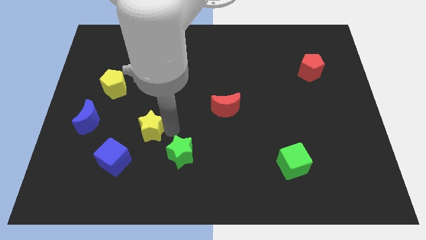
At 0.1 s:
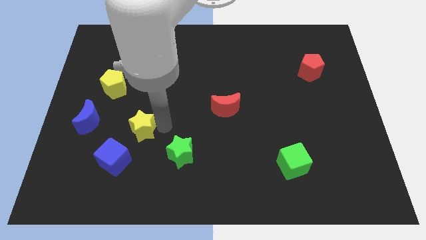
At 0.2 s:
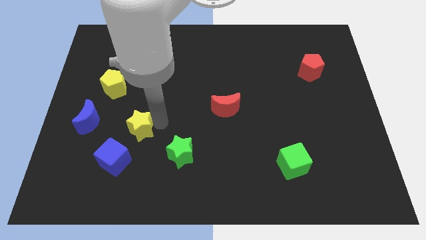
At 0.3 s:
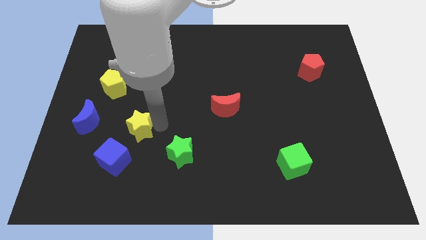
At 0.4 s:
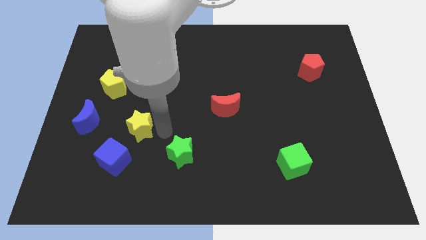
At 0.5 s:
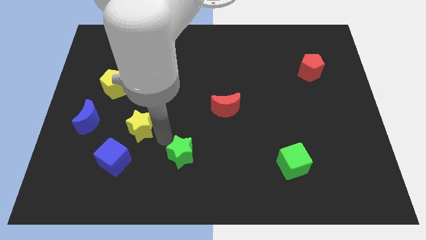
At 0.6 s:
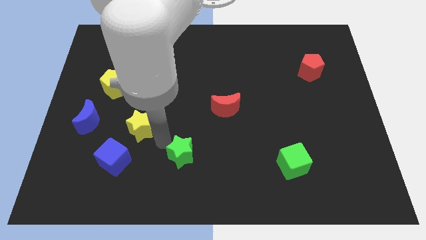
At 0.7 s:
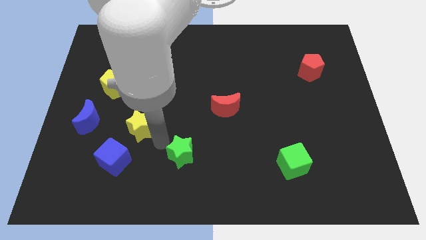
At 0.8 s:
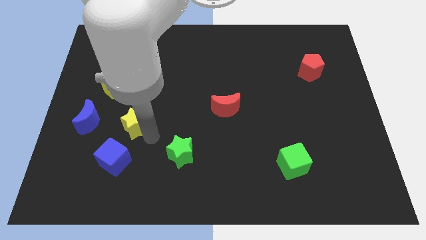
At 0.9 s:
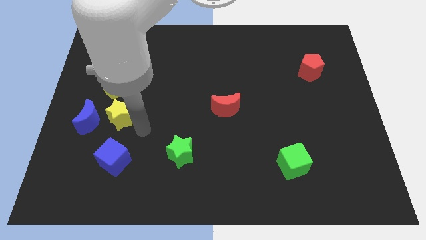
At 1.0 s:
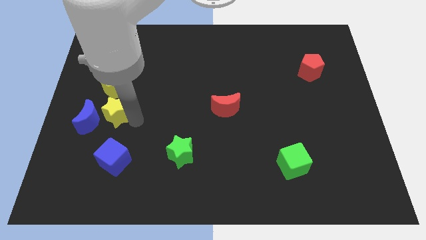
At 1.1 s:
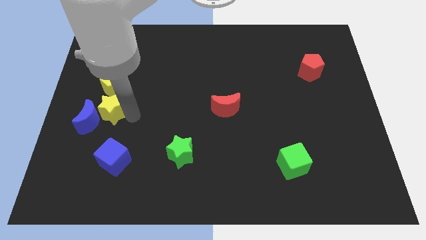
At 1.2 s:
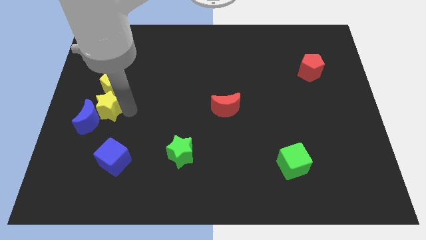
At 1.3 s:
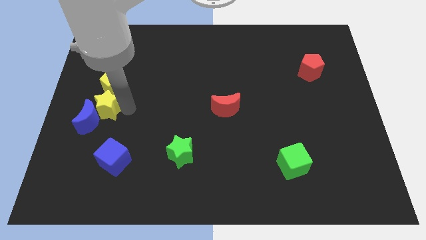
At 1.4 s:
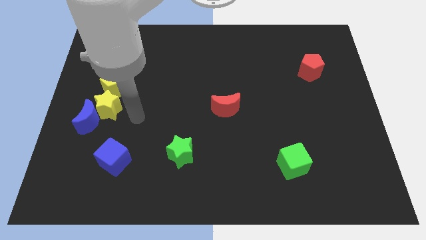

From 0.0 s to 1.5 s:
push the yellow star into a group of blocks

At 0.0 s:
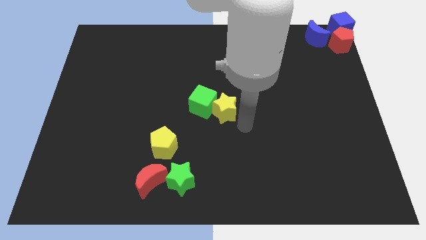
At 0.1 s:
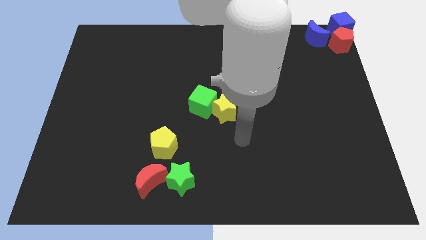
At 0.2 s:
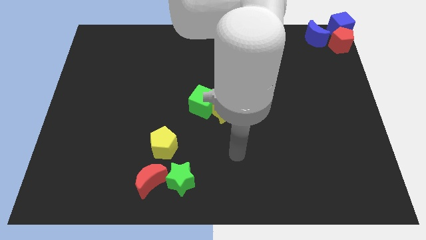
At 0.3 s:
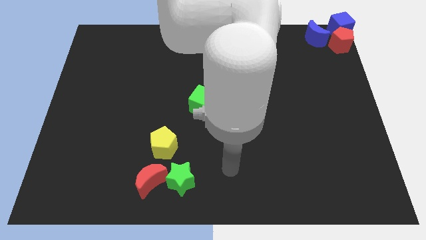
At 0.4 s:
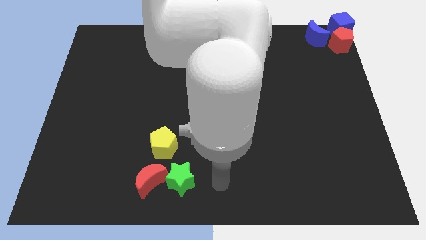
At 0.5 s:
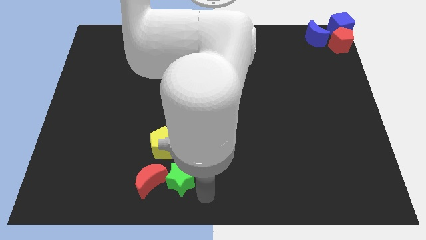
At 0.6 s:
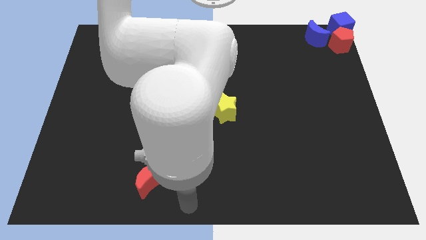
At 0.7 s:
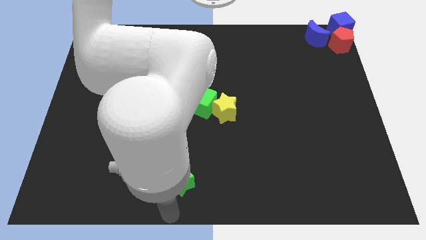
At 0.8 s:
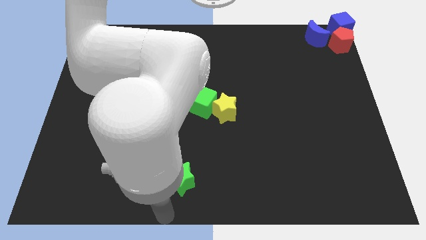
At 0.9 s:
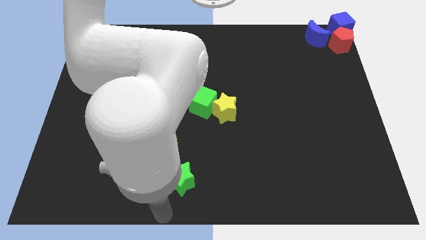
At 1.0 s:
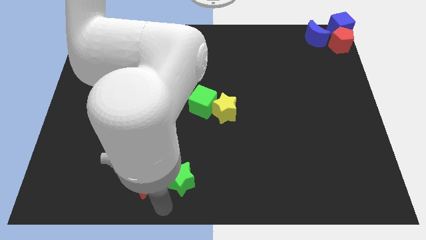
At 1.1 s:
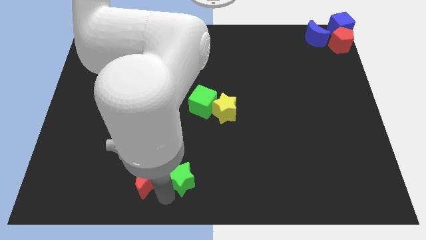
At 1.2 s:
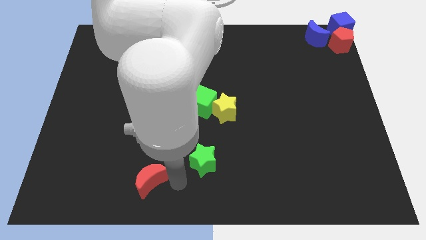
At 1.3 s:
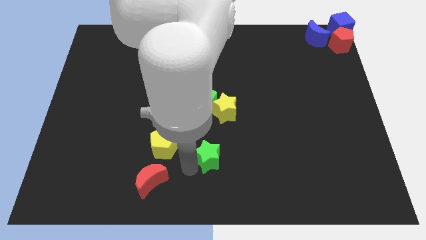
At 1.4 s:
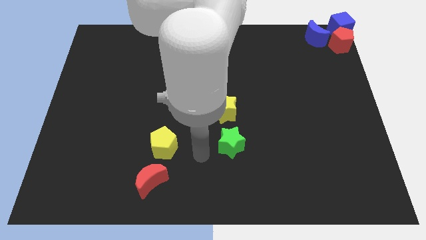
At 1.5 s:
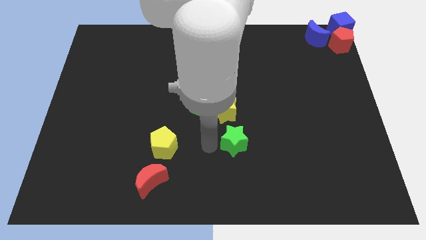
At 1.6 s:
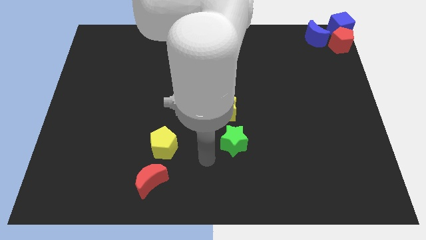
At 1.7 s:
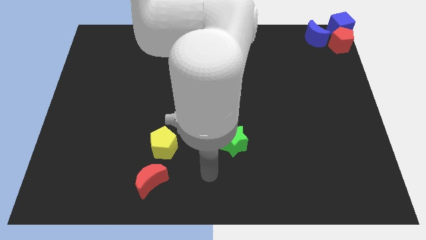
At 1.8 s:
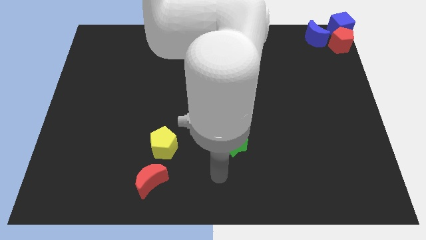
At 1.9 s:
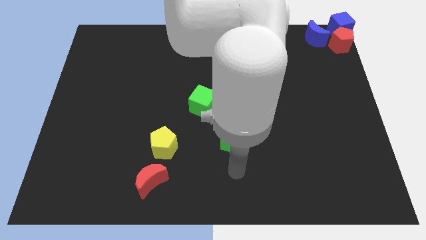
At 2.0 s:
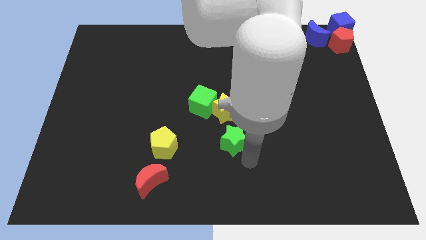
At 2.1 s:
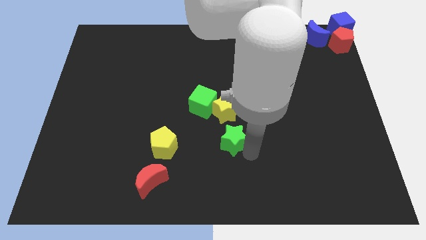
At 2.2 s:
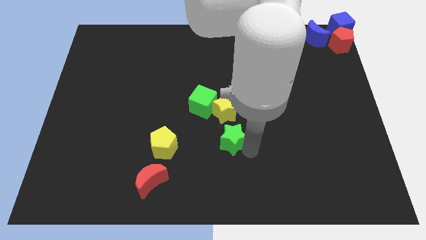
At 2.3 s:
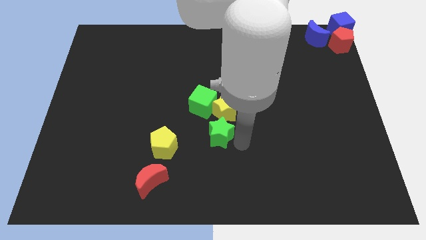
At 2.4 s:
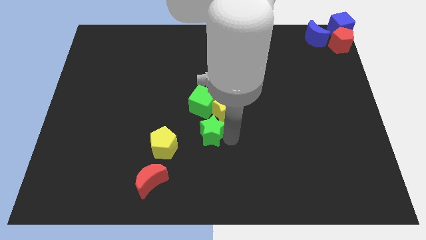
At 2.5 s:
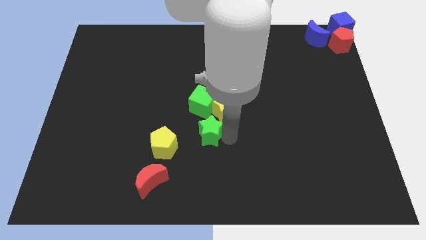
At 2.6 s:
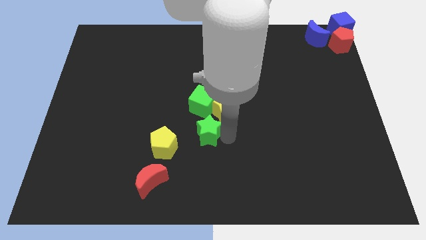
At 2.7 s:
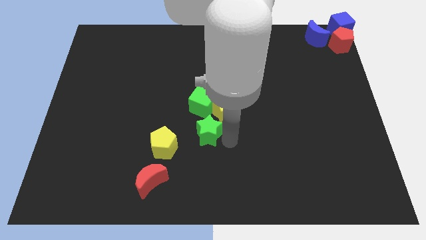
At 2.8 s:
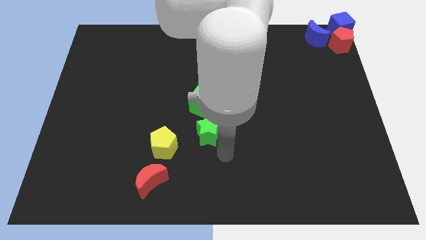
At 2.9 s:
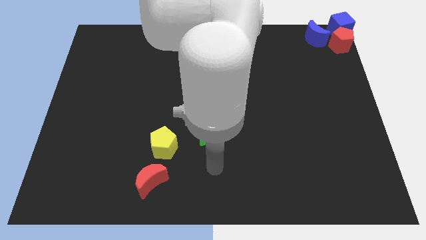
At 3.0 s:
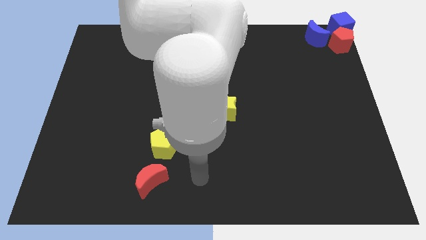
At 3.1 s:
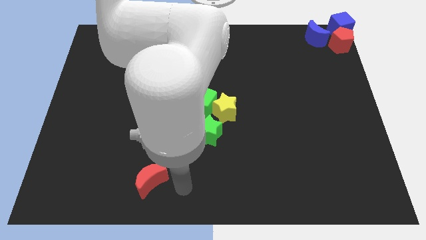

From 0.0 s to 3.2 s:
move the green star below the green cube

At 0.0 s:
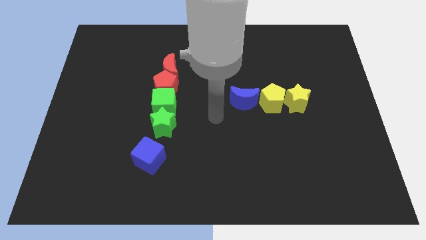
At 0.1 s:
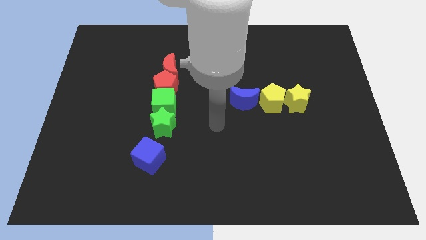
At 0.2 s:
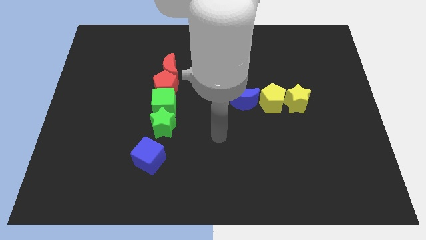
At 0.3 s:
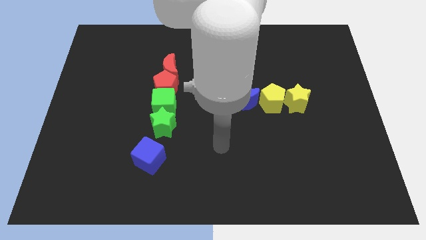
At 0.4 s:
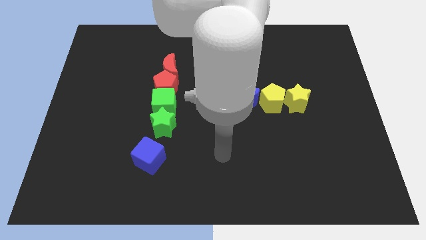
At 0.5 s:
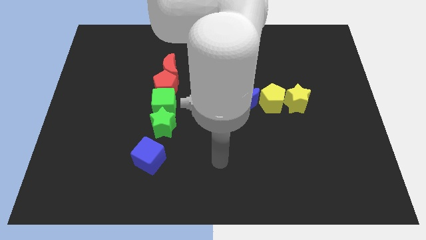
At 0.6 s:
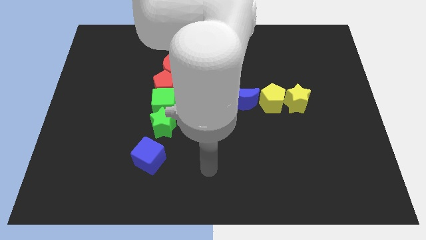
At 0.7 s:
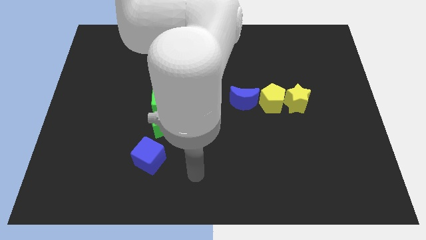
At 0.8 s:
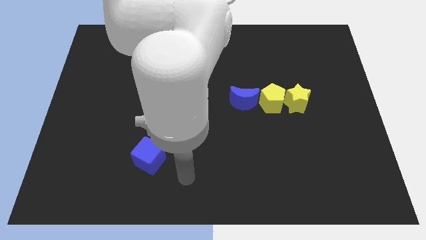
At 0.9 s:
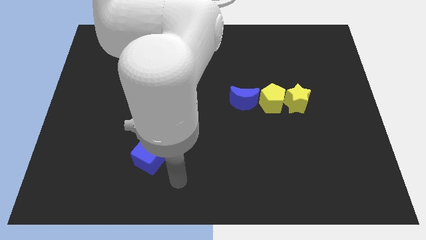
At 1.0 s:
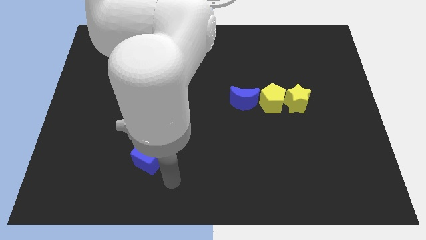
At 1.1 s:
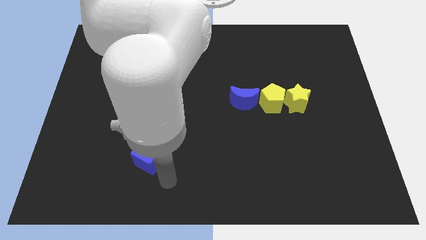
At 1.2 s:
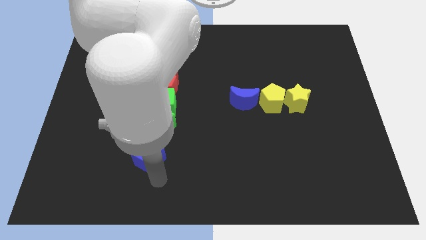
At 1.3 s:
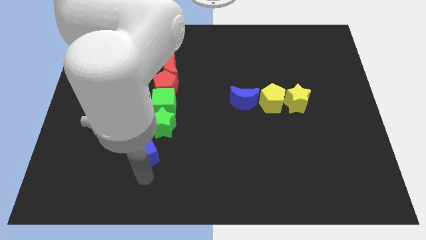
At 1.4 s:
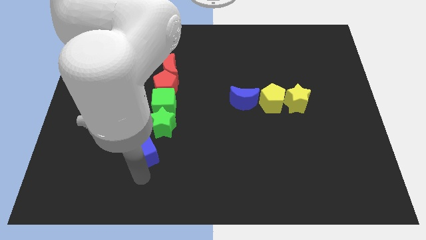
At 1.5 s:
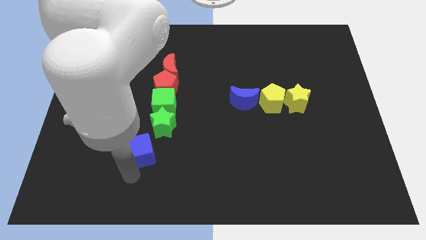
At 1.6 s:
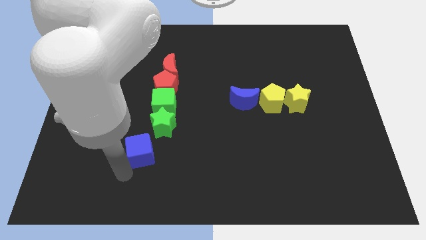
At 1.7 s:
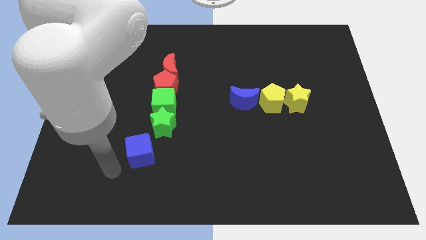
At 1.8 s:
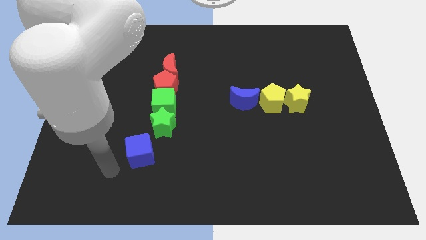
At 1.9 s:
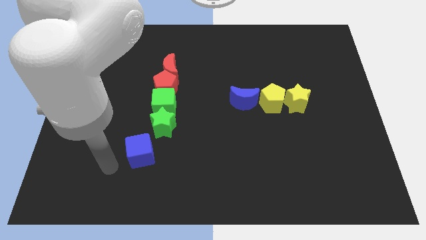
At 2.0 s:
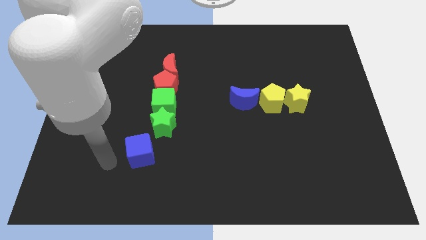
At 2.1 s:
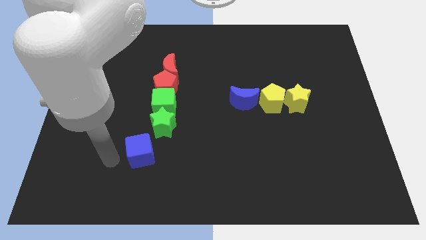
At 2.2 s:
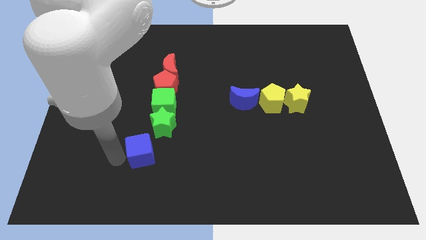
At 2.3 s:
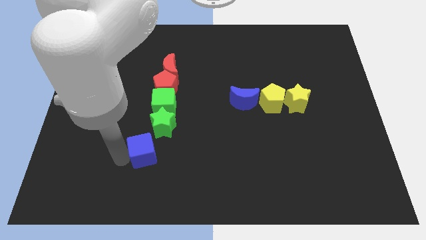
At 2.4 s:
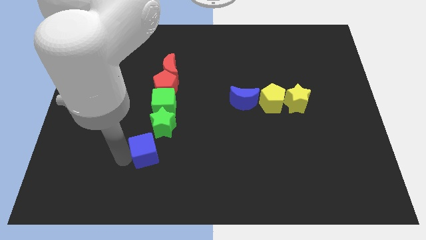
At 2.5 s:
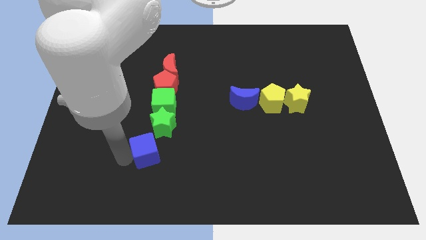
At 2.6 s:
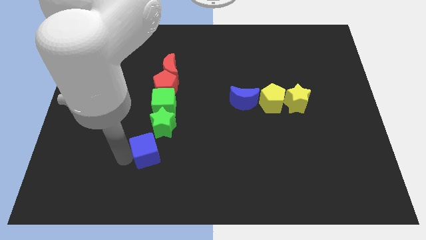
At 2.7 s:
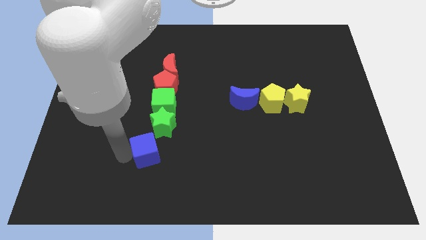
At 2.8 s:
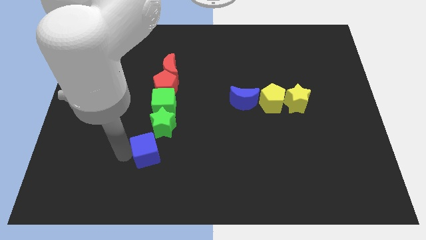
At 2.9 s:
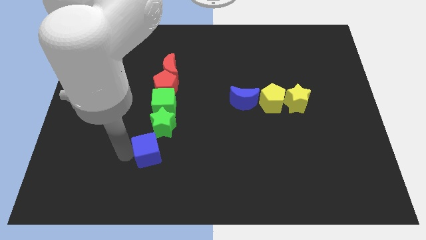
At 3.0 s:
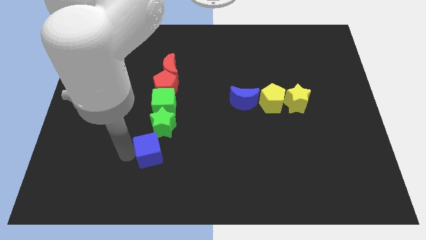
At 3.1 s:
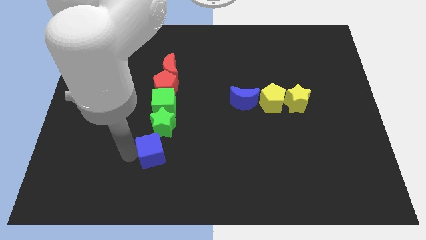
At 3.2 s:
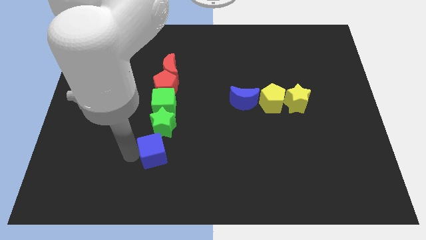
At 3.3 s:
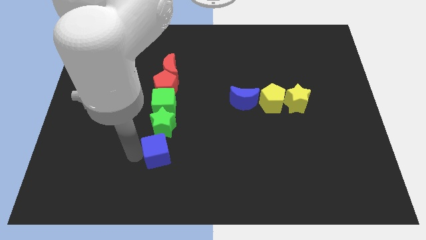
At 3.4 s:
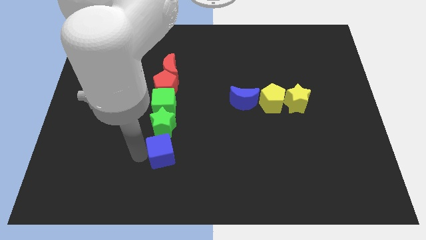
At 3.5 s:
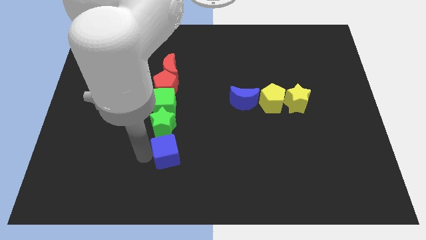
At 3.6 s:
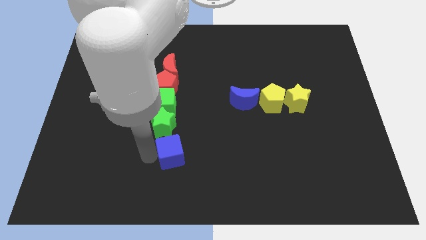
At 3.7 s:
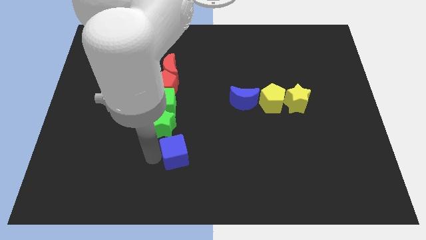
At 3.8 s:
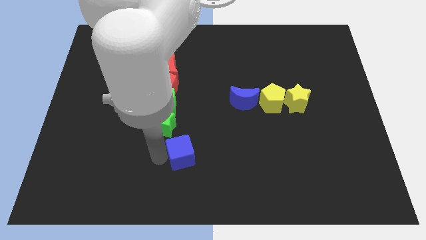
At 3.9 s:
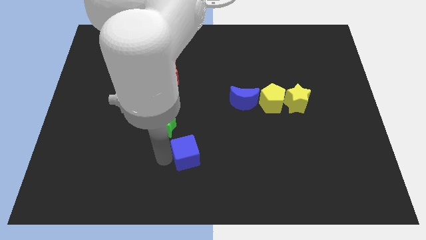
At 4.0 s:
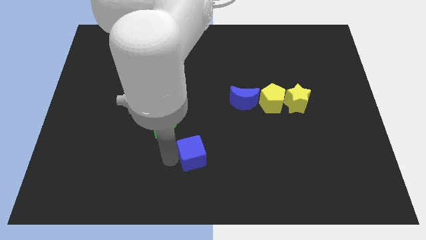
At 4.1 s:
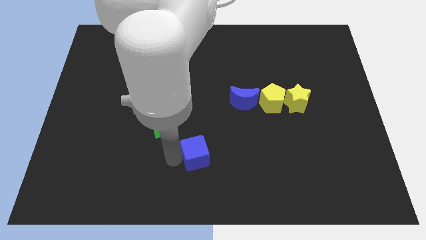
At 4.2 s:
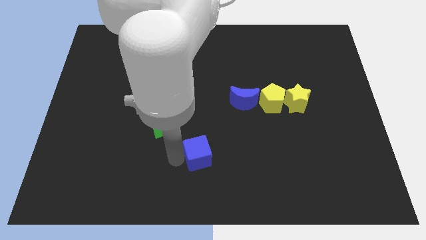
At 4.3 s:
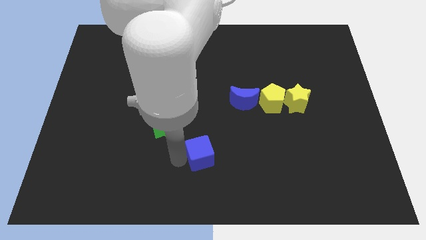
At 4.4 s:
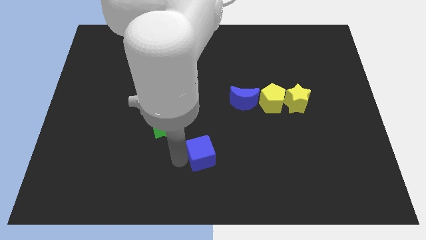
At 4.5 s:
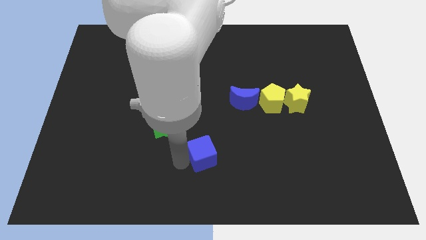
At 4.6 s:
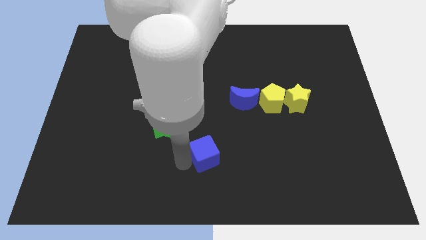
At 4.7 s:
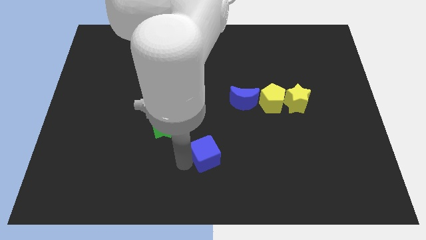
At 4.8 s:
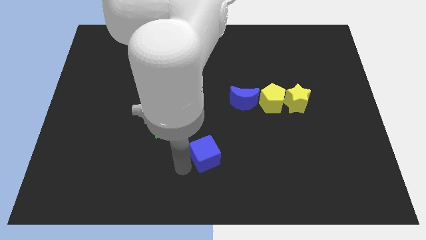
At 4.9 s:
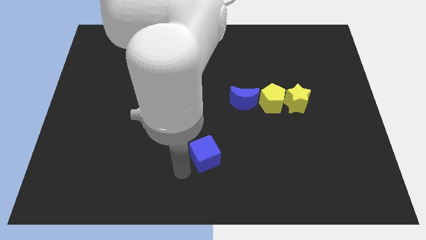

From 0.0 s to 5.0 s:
push the blue cube to the right of the board
